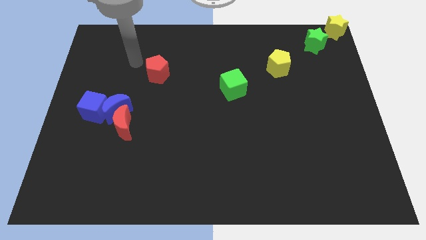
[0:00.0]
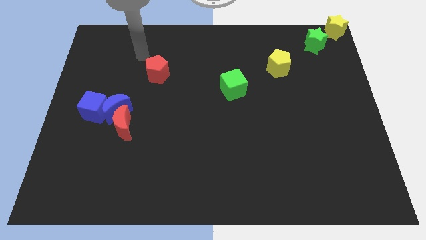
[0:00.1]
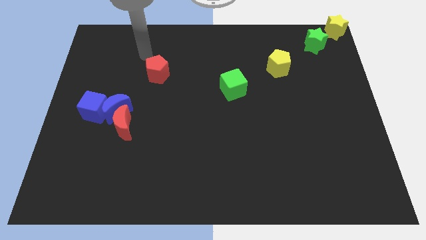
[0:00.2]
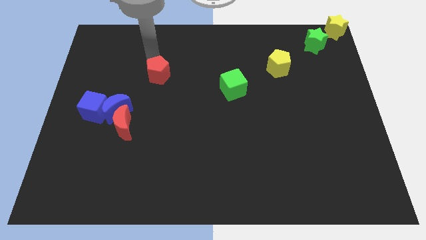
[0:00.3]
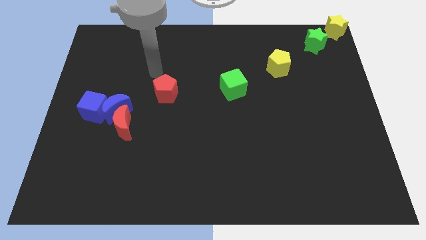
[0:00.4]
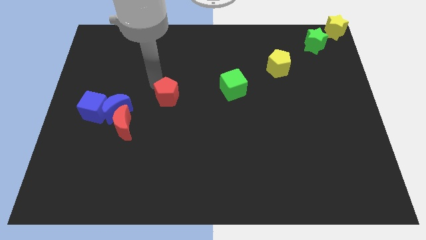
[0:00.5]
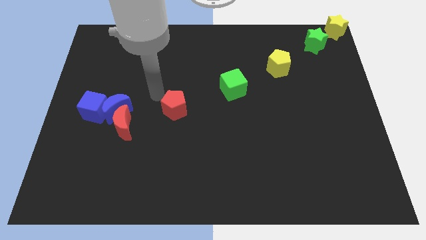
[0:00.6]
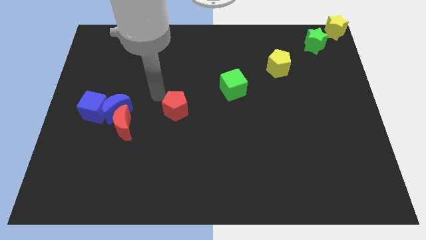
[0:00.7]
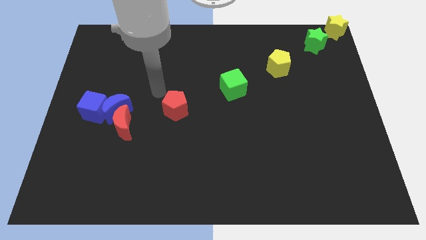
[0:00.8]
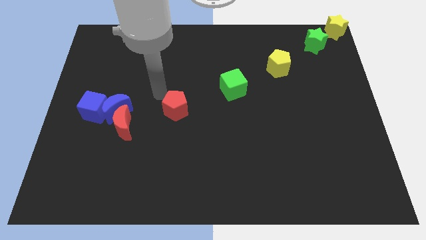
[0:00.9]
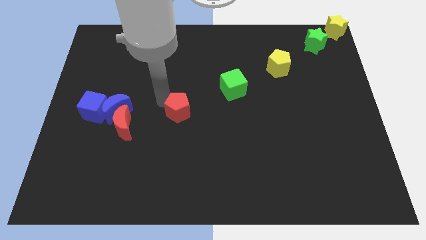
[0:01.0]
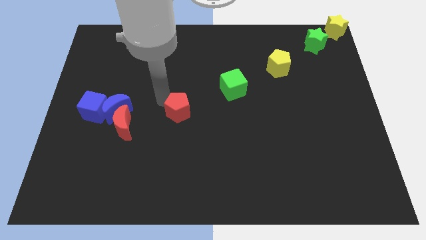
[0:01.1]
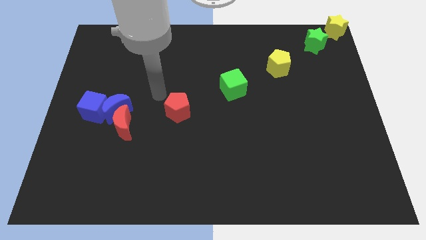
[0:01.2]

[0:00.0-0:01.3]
move the red pentagon diagonal to the green cube

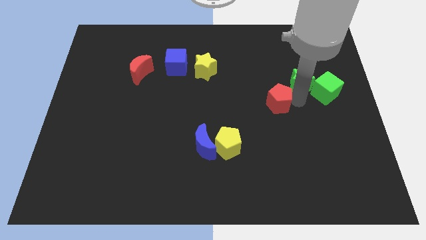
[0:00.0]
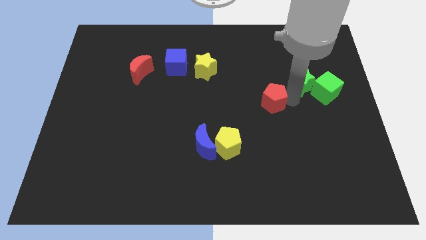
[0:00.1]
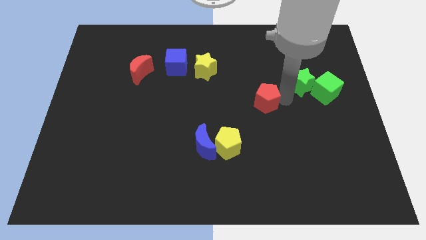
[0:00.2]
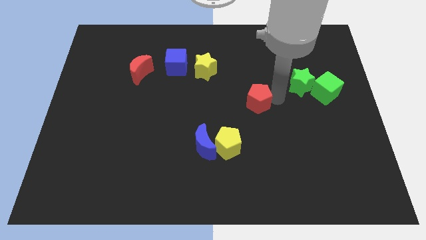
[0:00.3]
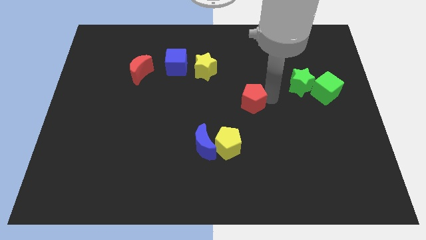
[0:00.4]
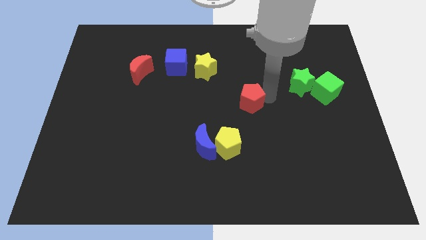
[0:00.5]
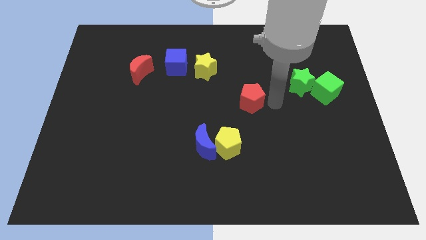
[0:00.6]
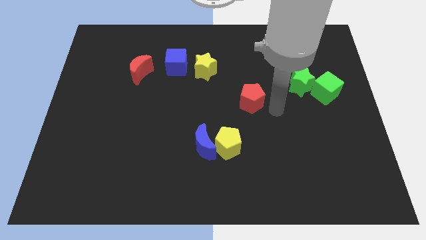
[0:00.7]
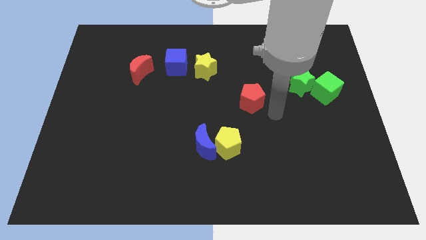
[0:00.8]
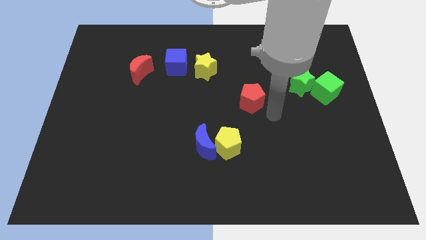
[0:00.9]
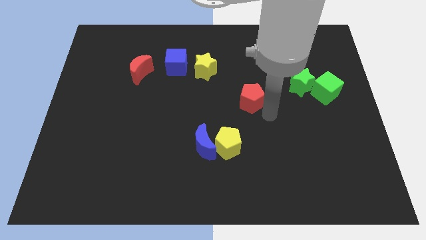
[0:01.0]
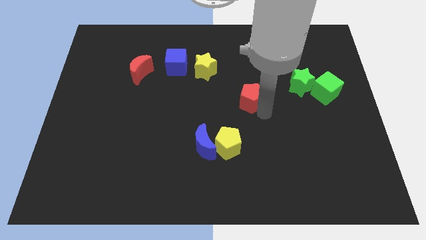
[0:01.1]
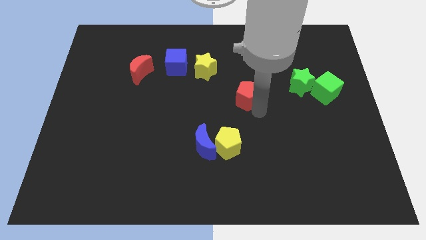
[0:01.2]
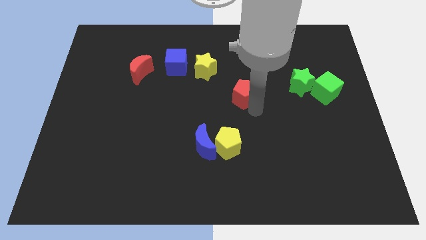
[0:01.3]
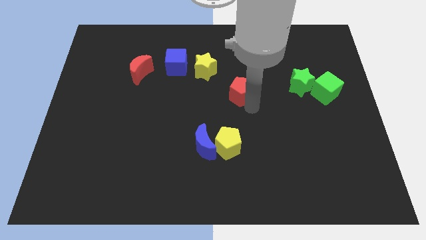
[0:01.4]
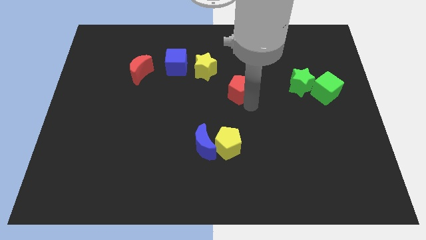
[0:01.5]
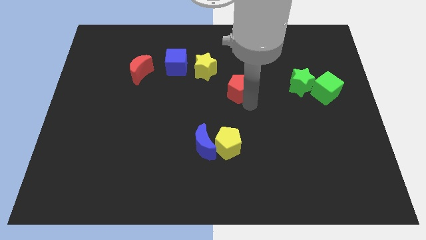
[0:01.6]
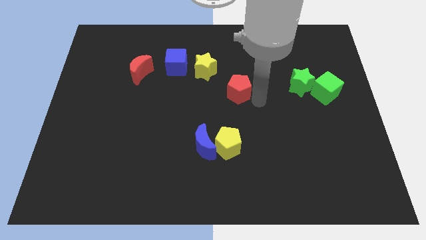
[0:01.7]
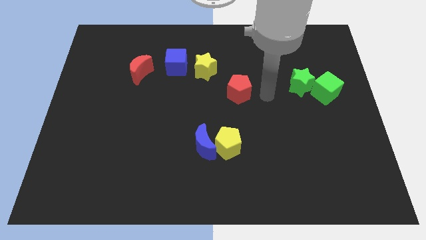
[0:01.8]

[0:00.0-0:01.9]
move the red pentagon diagonally below the yellow star

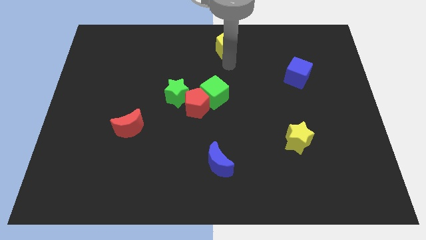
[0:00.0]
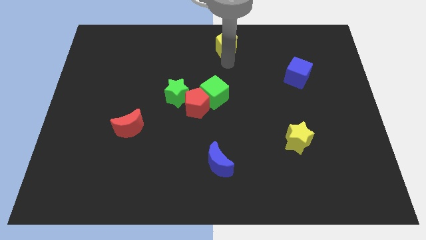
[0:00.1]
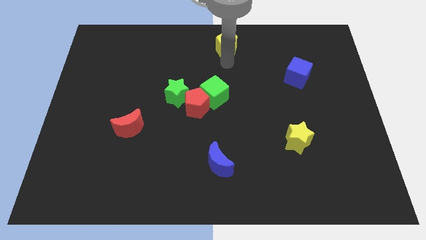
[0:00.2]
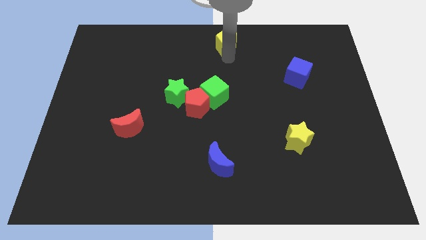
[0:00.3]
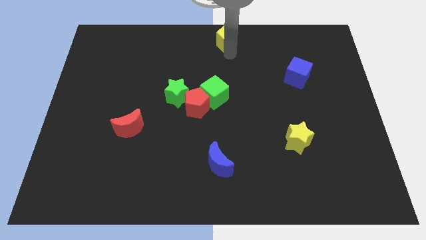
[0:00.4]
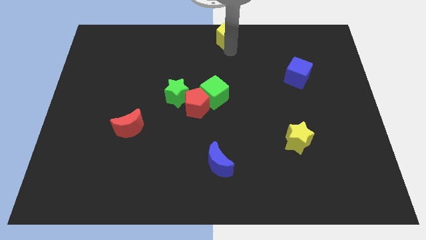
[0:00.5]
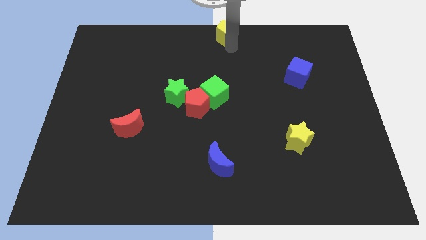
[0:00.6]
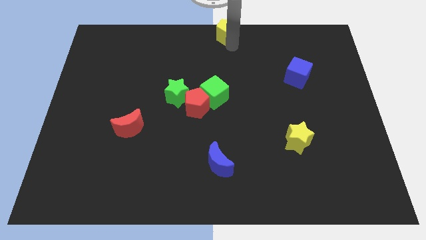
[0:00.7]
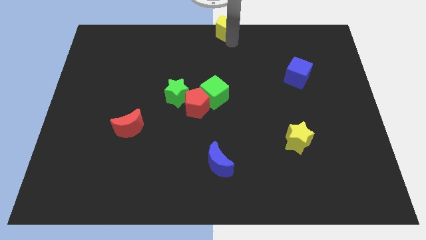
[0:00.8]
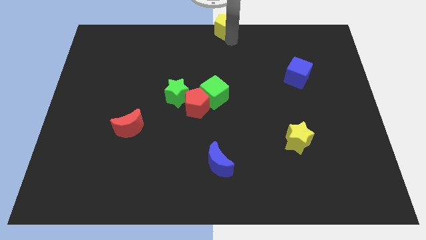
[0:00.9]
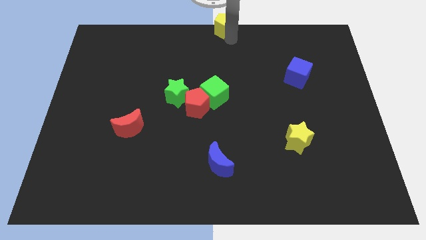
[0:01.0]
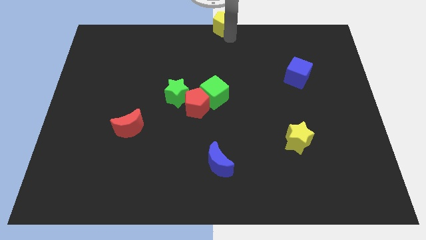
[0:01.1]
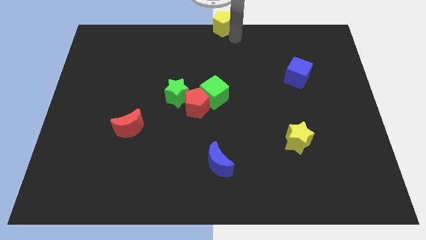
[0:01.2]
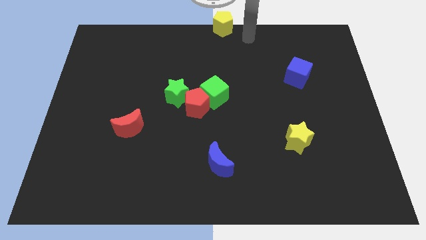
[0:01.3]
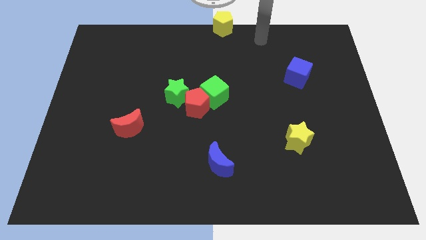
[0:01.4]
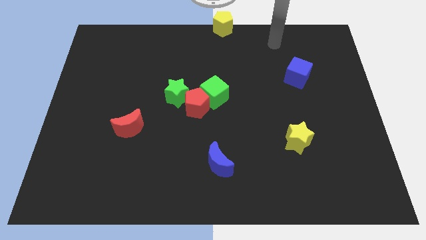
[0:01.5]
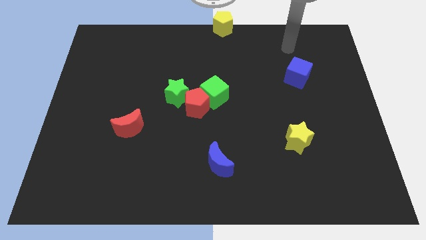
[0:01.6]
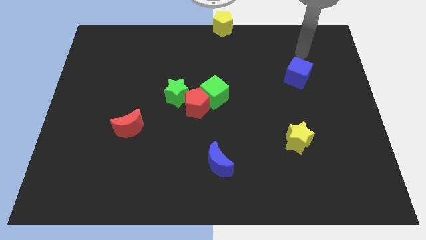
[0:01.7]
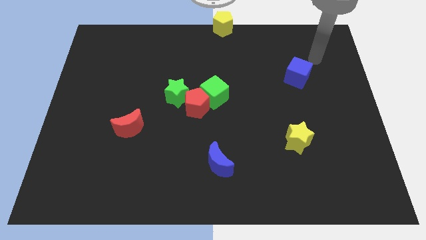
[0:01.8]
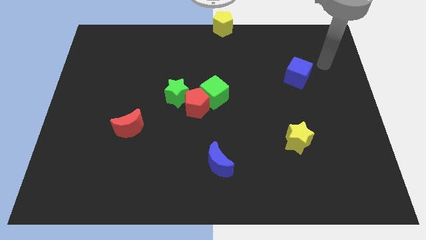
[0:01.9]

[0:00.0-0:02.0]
push the yellow pentagon to the center top

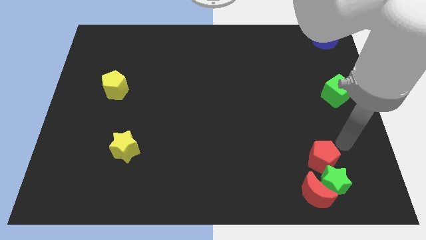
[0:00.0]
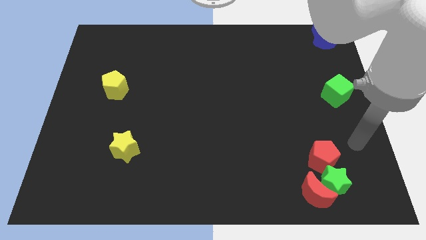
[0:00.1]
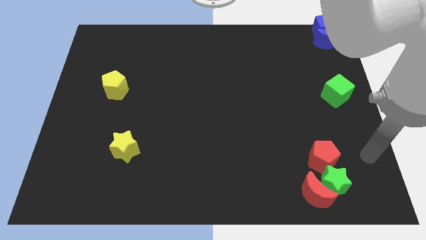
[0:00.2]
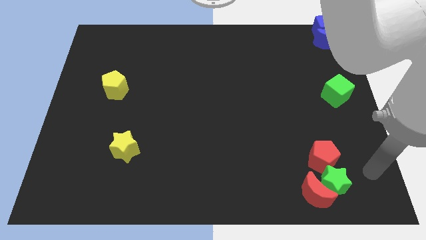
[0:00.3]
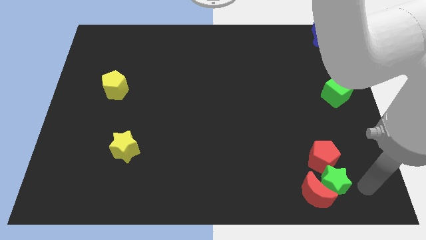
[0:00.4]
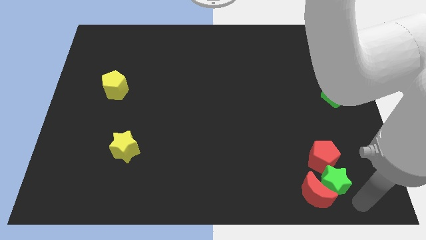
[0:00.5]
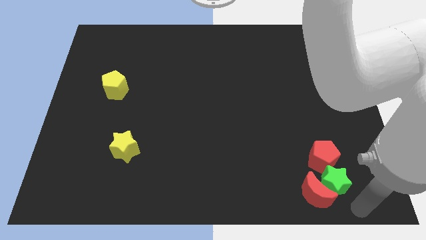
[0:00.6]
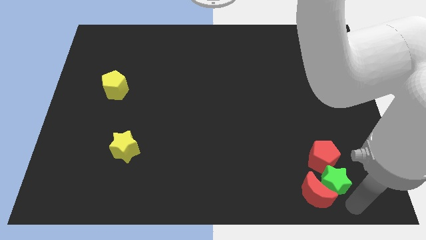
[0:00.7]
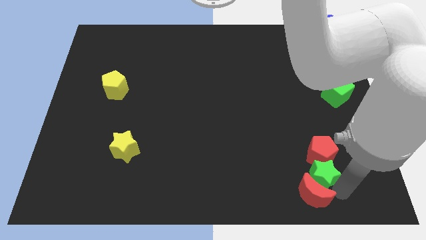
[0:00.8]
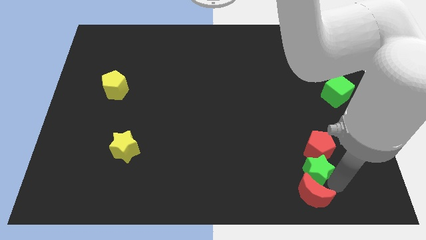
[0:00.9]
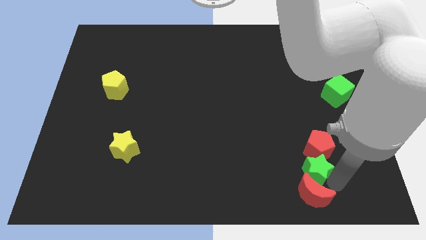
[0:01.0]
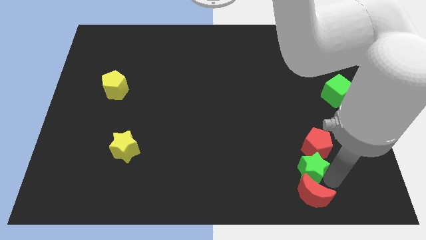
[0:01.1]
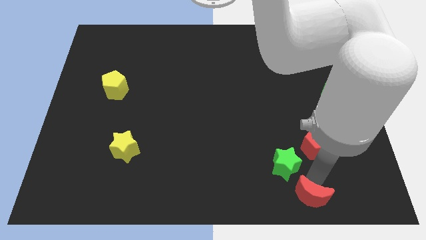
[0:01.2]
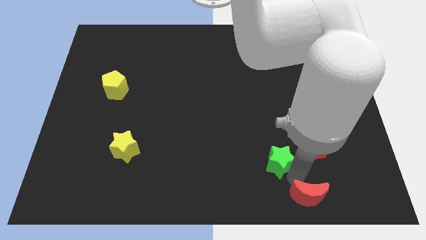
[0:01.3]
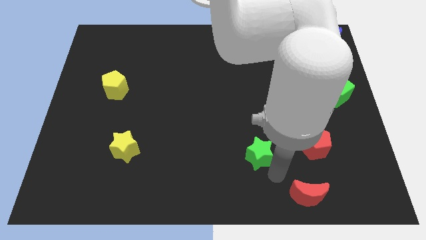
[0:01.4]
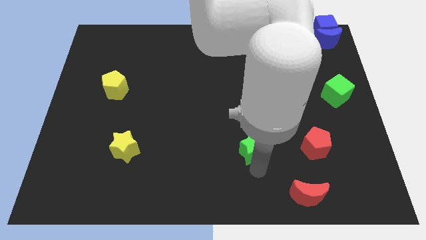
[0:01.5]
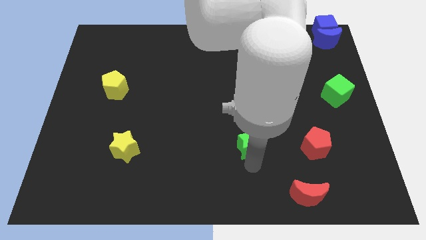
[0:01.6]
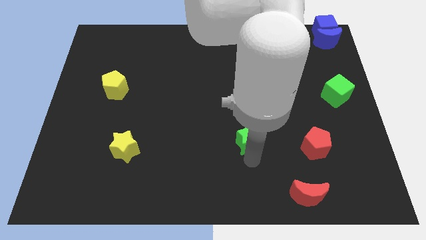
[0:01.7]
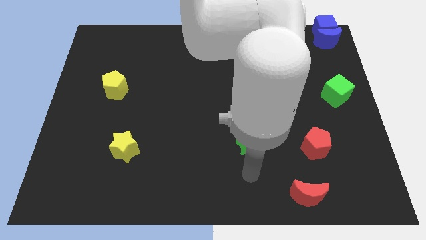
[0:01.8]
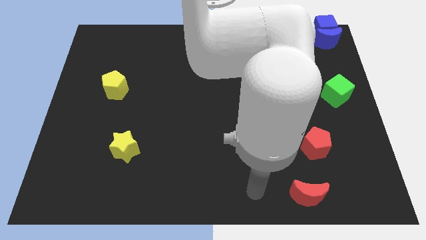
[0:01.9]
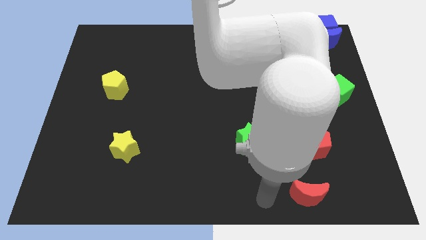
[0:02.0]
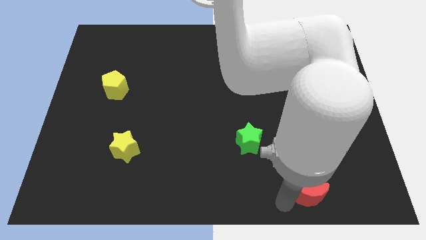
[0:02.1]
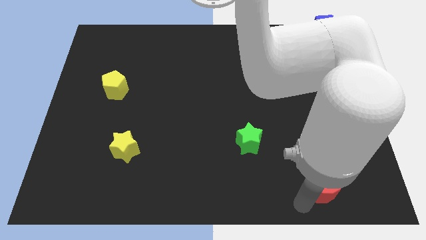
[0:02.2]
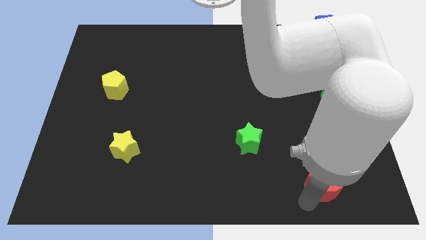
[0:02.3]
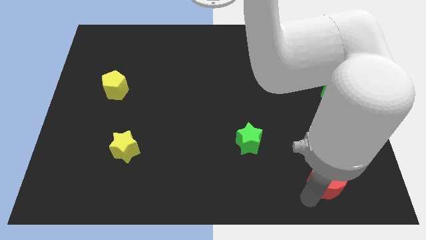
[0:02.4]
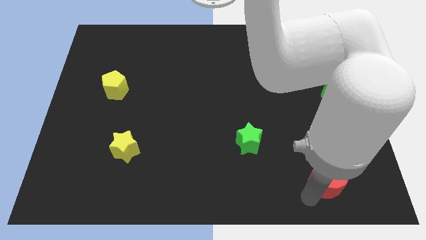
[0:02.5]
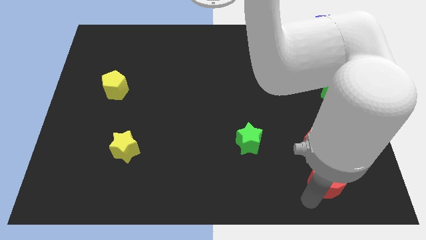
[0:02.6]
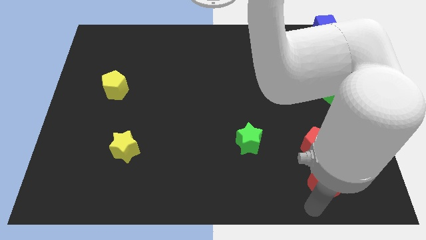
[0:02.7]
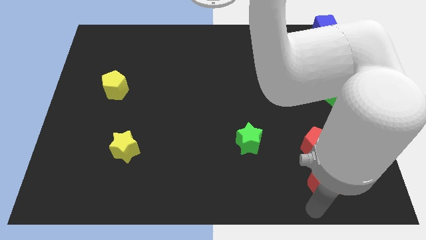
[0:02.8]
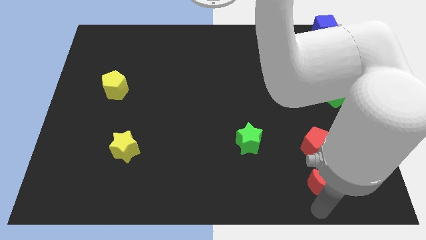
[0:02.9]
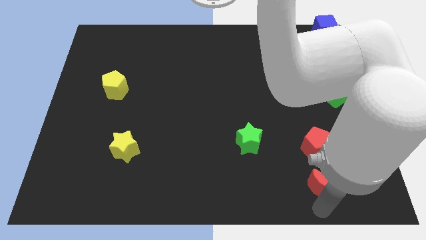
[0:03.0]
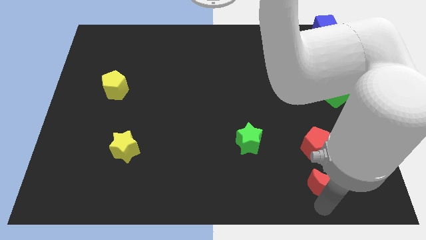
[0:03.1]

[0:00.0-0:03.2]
put red blocks diagonal between green star

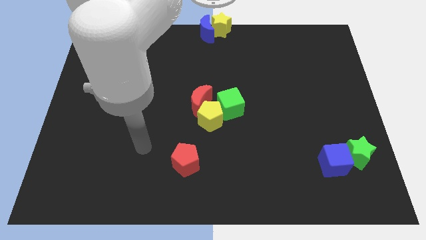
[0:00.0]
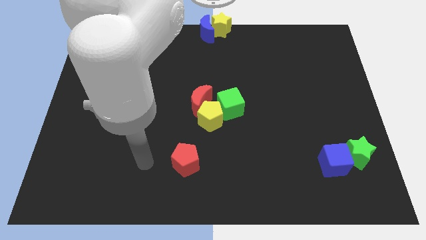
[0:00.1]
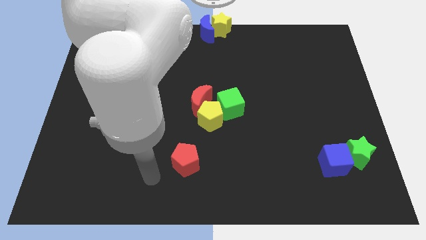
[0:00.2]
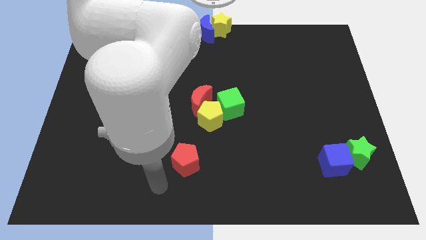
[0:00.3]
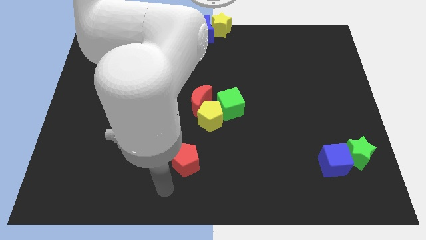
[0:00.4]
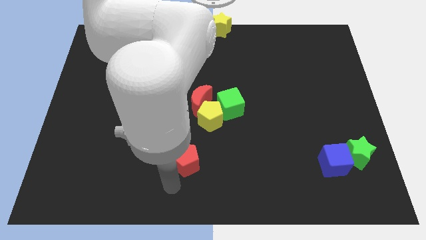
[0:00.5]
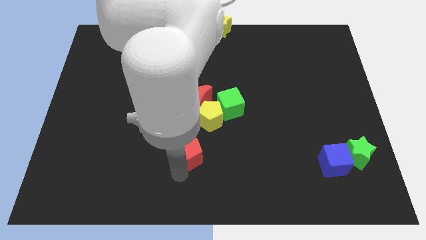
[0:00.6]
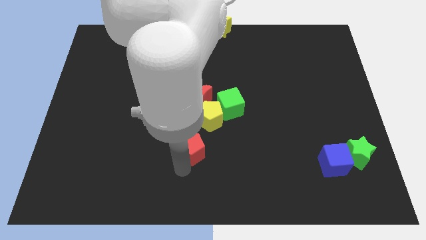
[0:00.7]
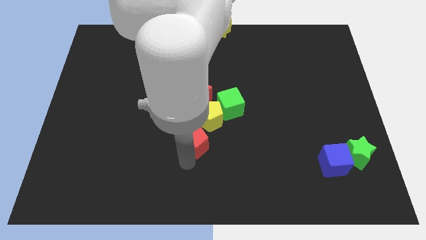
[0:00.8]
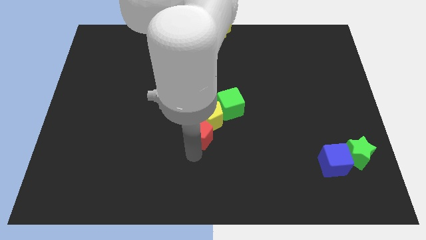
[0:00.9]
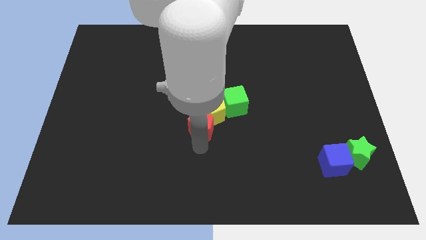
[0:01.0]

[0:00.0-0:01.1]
push red pentagon into yellow pentagon
